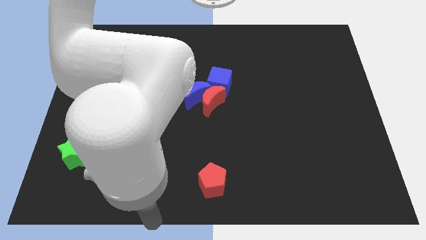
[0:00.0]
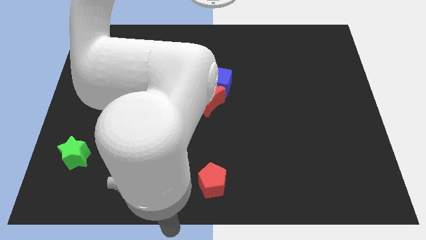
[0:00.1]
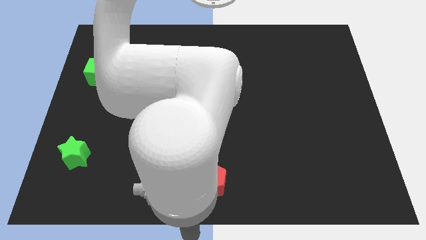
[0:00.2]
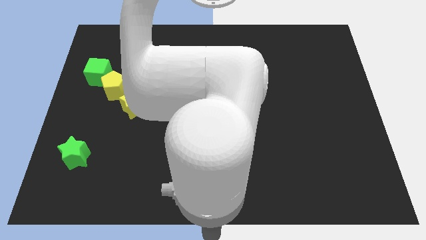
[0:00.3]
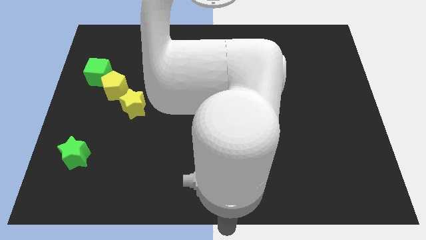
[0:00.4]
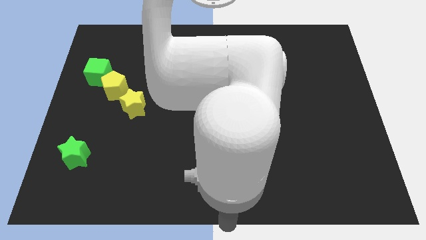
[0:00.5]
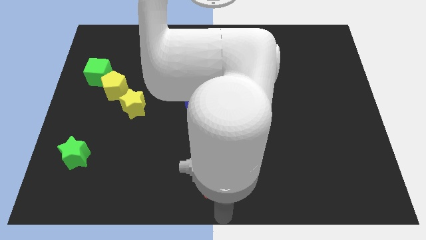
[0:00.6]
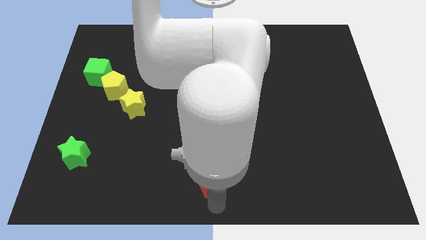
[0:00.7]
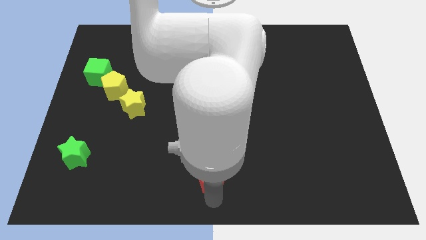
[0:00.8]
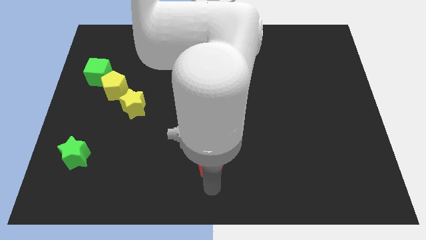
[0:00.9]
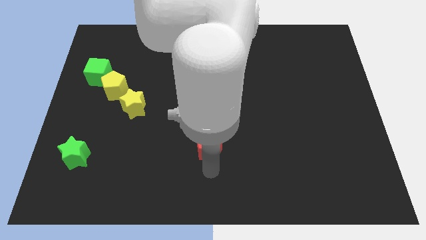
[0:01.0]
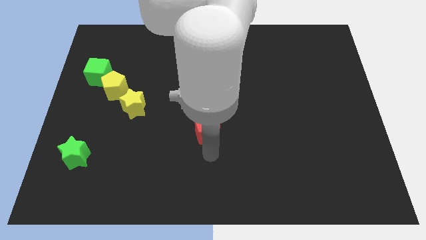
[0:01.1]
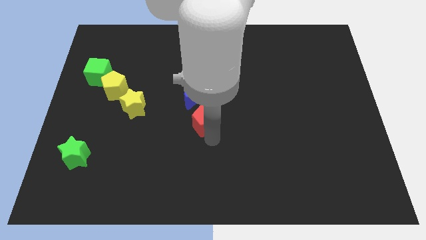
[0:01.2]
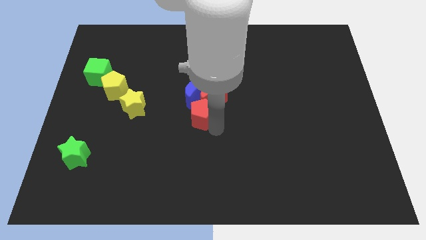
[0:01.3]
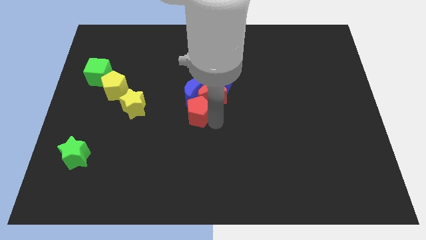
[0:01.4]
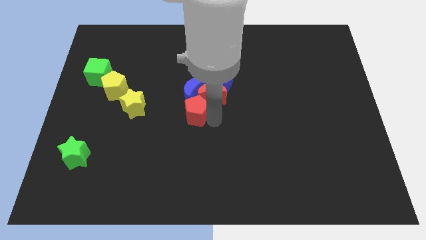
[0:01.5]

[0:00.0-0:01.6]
push red pentagon into group of blocks

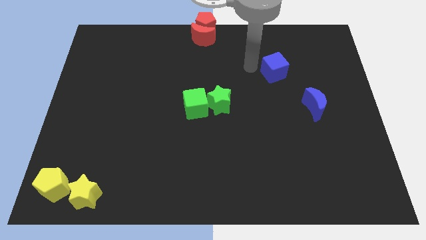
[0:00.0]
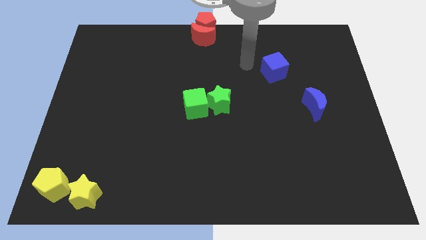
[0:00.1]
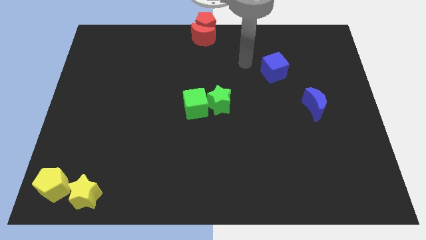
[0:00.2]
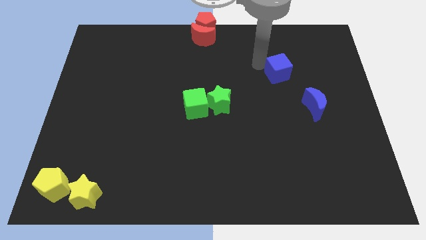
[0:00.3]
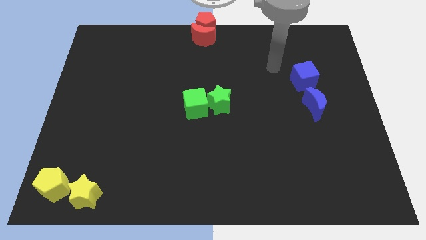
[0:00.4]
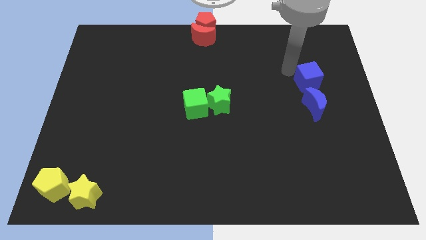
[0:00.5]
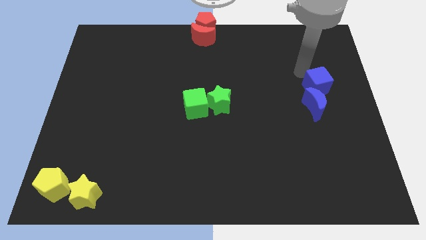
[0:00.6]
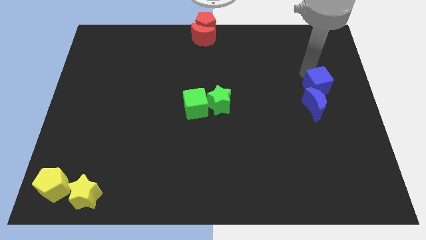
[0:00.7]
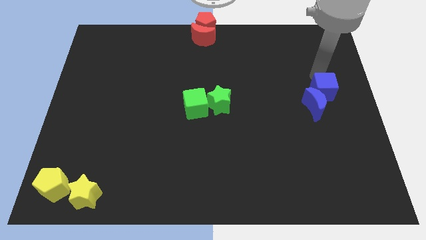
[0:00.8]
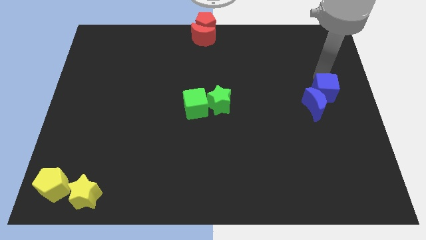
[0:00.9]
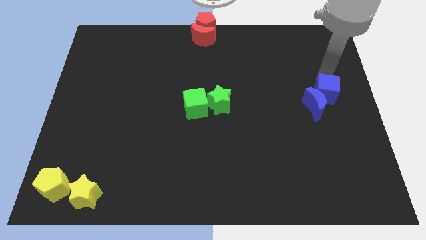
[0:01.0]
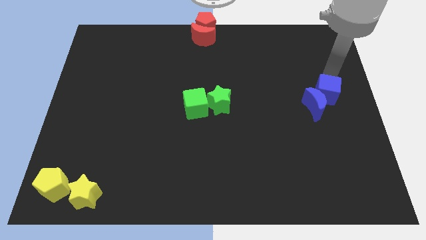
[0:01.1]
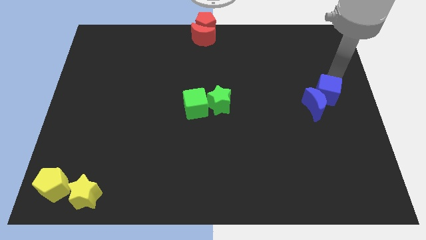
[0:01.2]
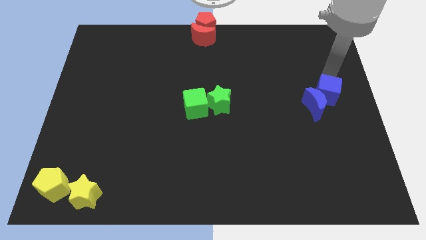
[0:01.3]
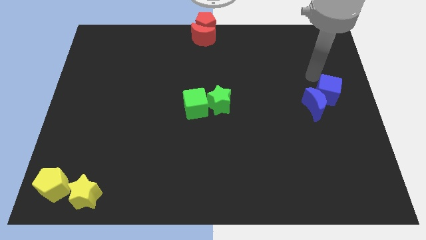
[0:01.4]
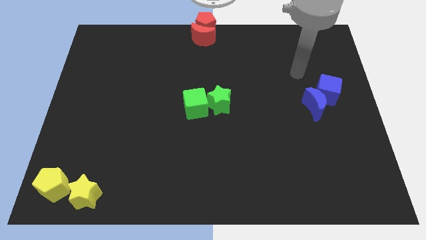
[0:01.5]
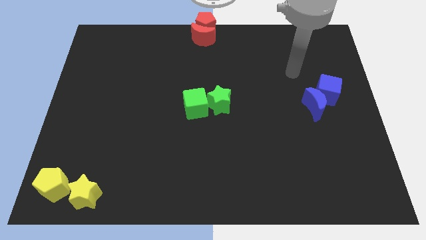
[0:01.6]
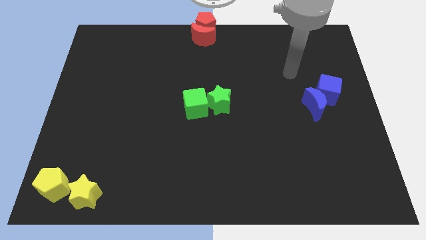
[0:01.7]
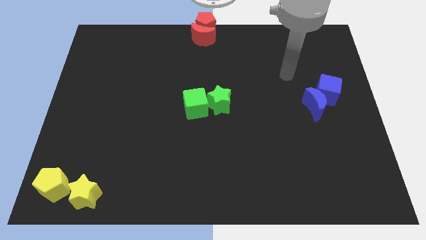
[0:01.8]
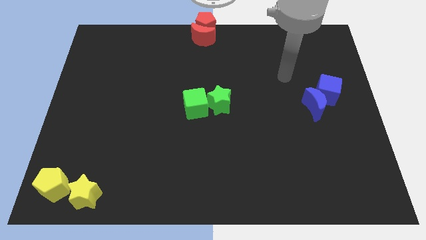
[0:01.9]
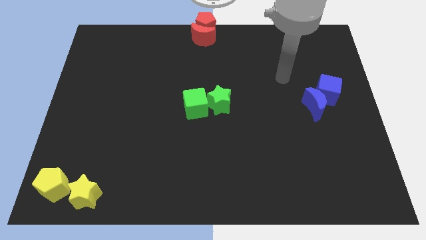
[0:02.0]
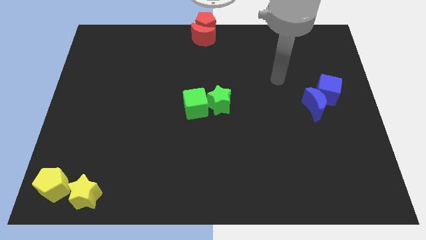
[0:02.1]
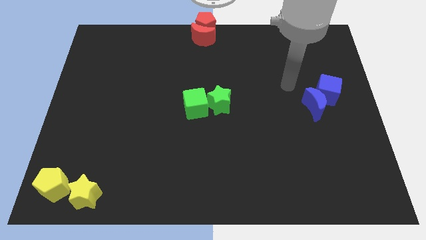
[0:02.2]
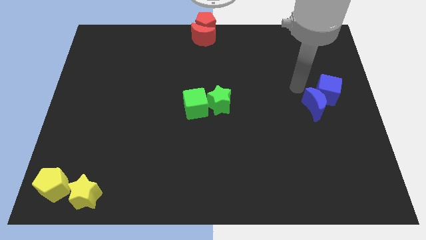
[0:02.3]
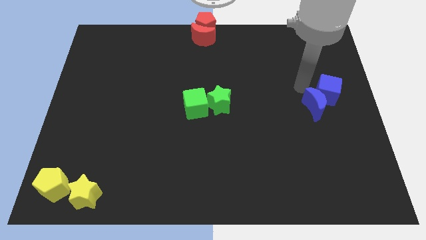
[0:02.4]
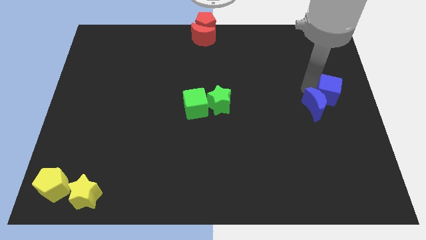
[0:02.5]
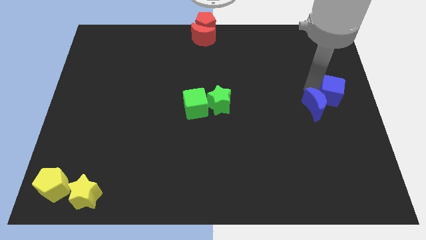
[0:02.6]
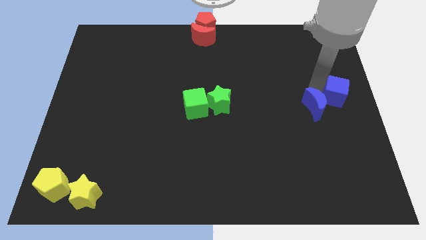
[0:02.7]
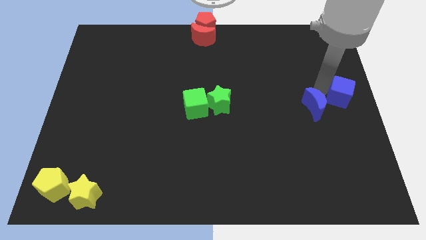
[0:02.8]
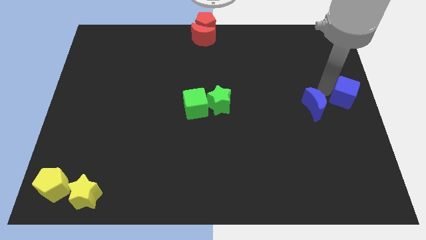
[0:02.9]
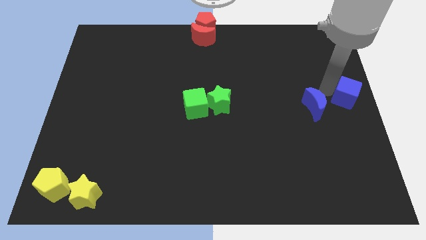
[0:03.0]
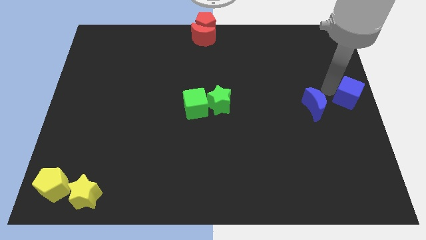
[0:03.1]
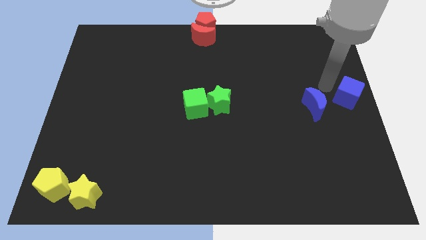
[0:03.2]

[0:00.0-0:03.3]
push the blue cube to the center right of the board

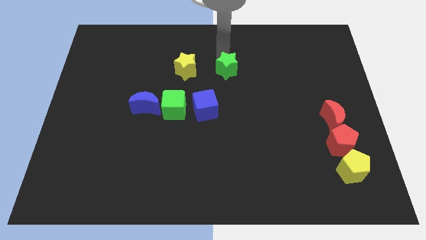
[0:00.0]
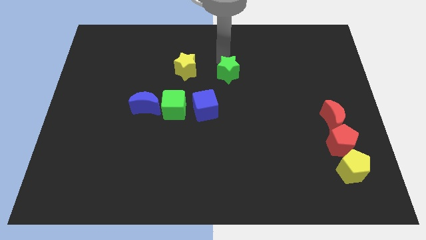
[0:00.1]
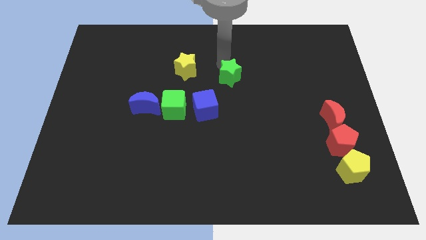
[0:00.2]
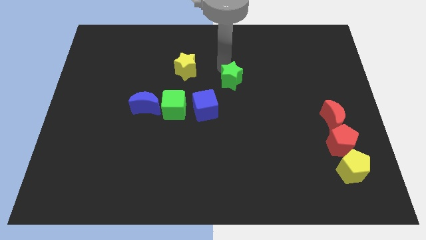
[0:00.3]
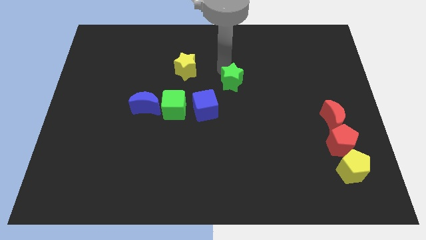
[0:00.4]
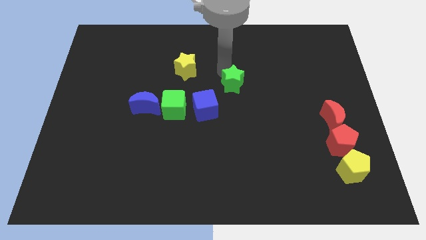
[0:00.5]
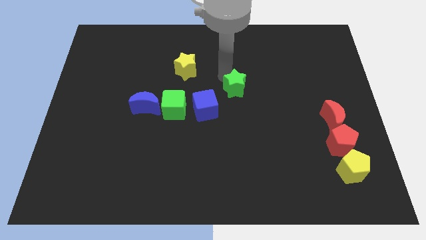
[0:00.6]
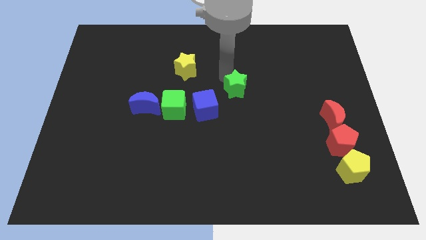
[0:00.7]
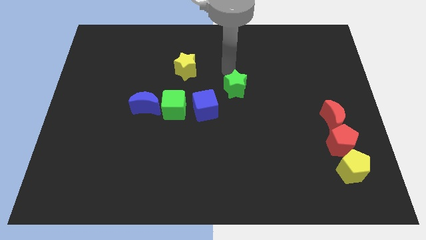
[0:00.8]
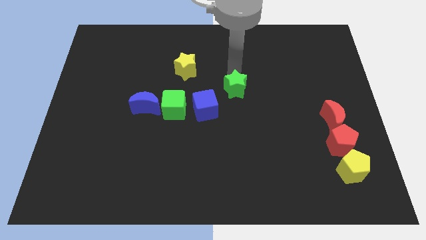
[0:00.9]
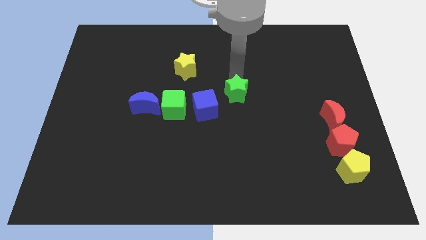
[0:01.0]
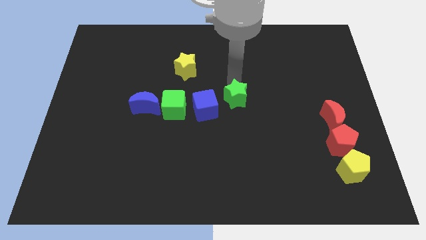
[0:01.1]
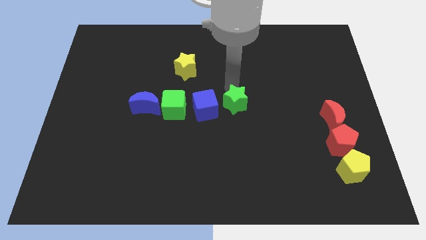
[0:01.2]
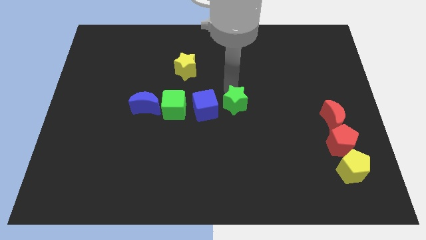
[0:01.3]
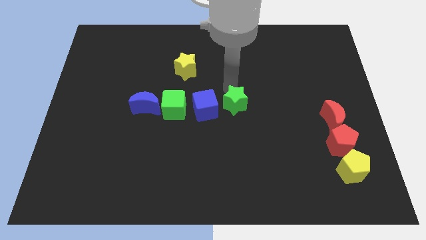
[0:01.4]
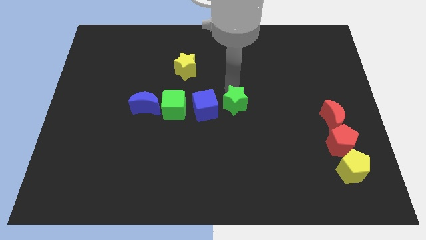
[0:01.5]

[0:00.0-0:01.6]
bring the green star to the right side of the blue cube

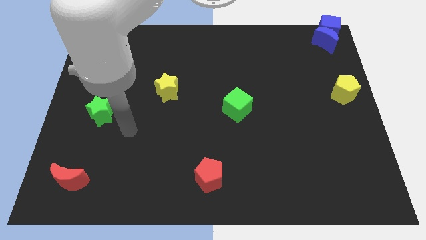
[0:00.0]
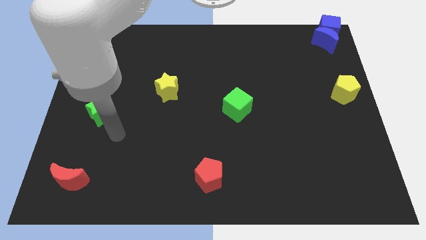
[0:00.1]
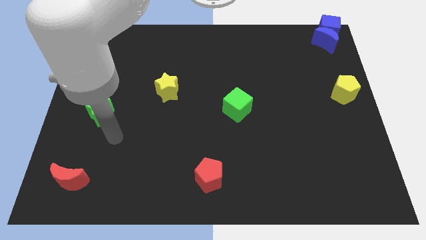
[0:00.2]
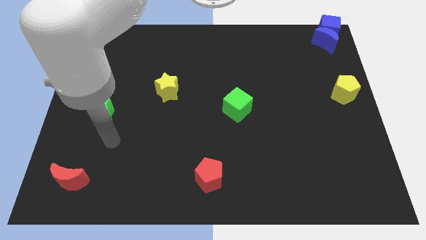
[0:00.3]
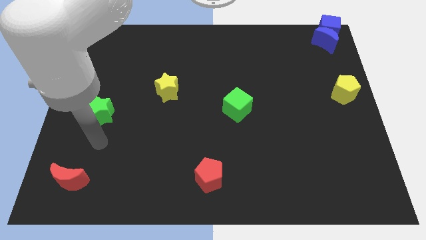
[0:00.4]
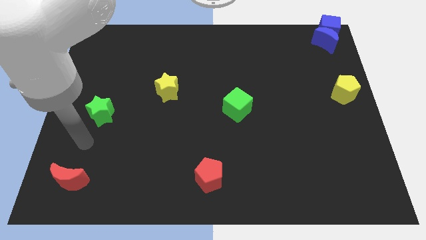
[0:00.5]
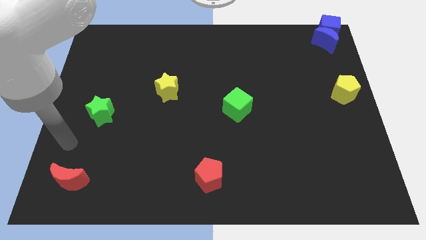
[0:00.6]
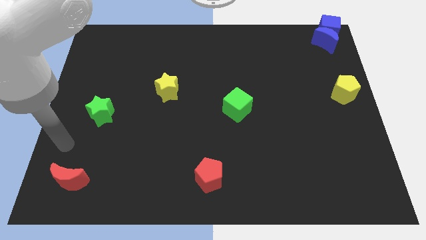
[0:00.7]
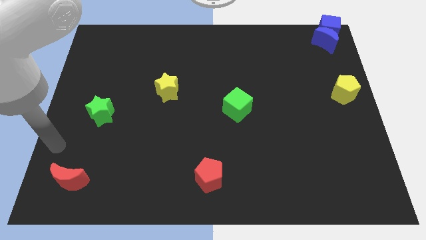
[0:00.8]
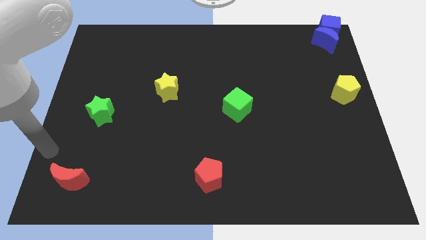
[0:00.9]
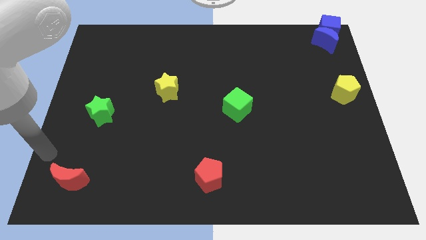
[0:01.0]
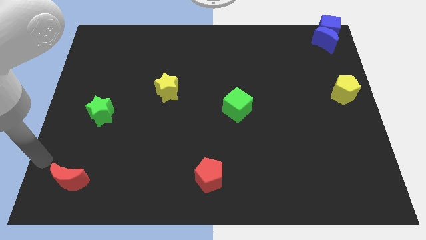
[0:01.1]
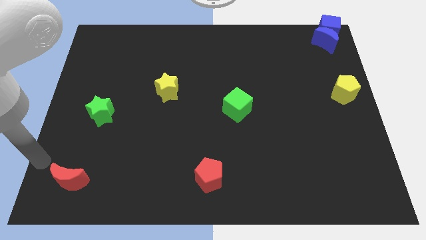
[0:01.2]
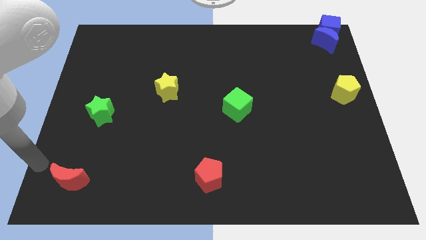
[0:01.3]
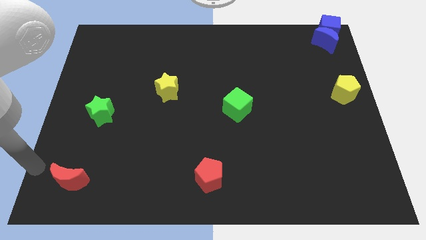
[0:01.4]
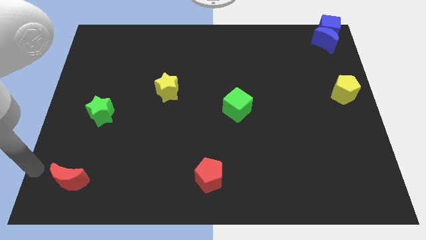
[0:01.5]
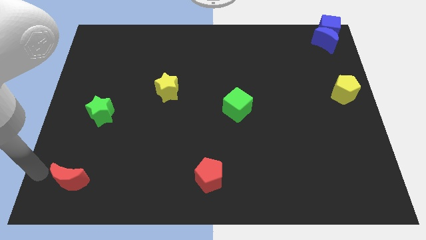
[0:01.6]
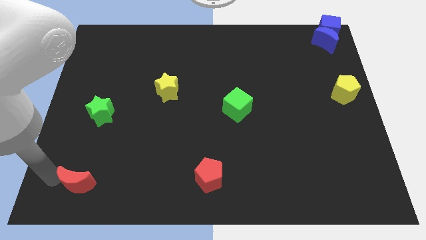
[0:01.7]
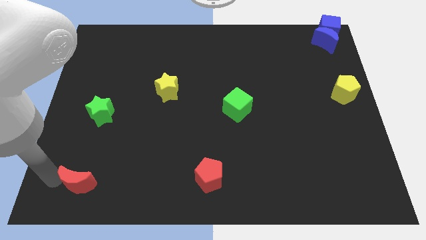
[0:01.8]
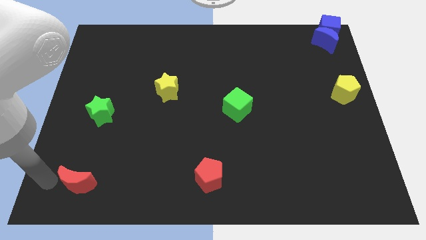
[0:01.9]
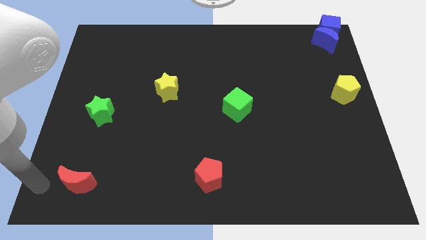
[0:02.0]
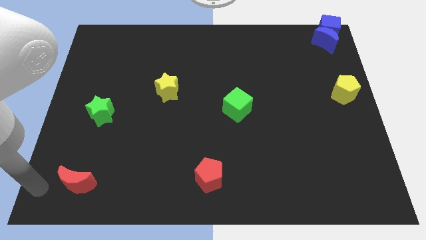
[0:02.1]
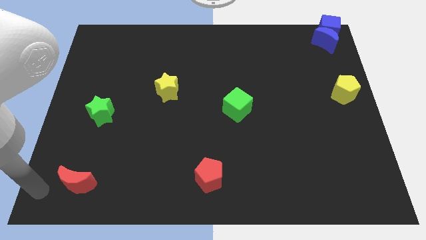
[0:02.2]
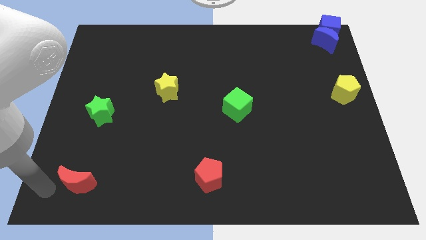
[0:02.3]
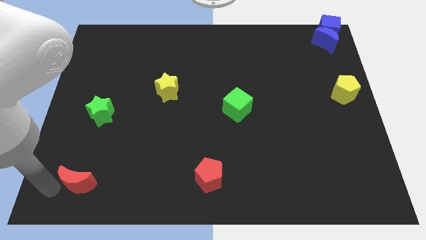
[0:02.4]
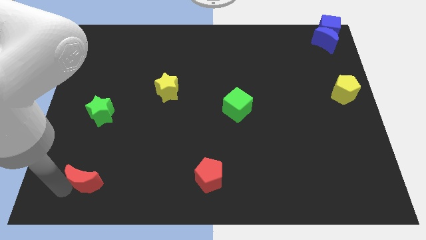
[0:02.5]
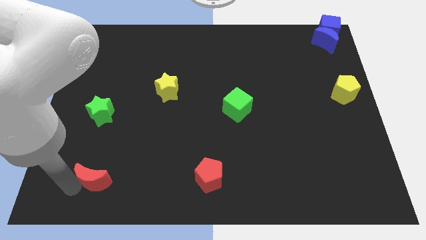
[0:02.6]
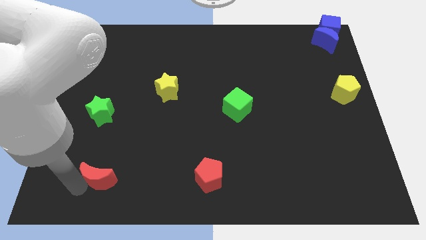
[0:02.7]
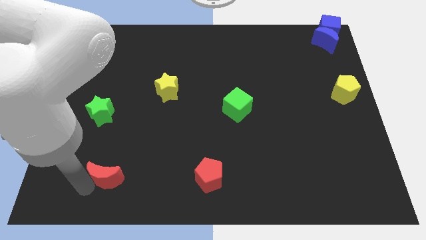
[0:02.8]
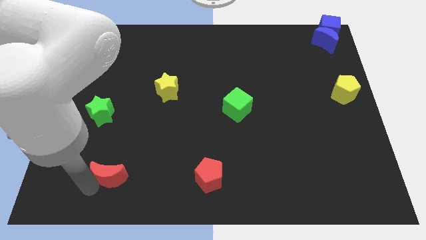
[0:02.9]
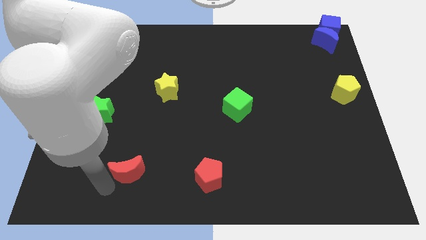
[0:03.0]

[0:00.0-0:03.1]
place red moon parallel to red pentagon
